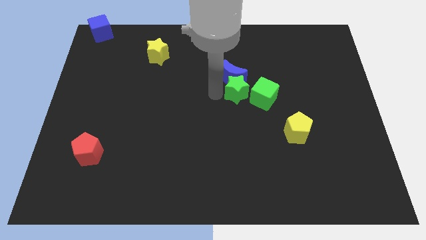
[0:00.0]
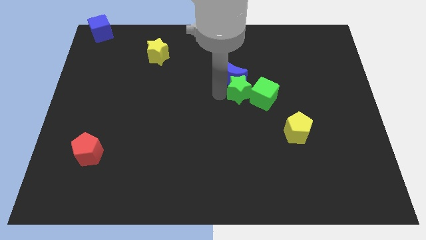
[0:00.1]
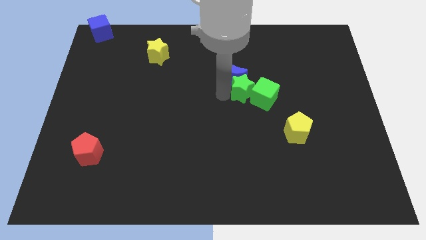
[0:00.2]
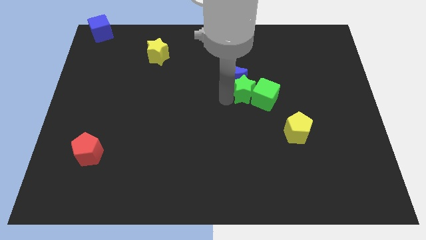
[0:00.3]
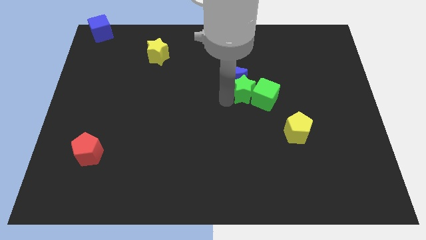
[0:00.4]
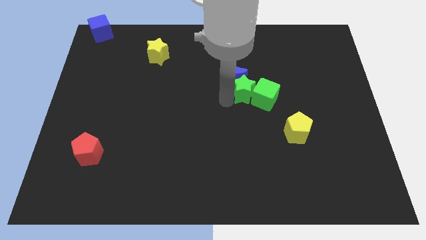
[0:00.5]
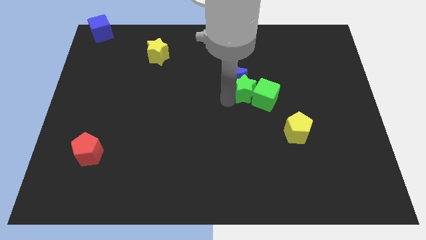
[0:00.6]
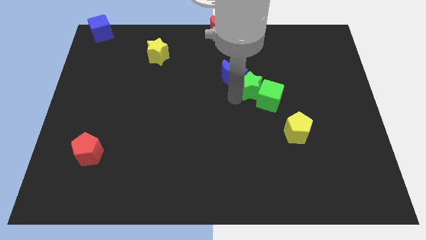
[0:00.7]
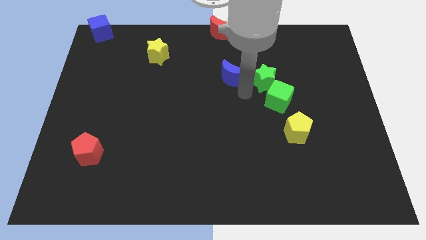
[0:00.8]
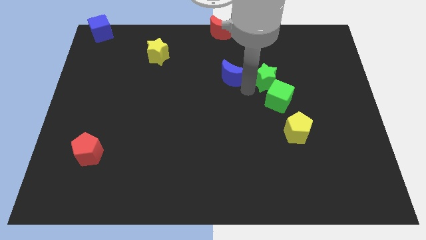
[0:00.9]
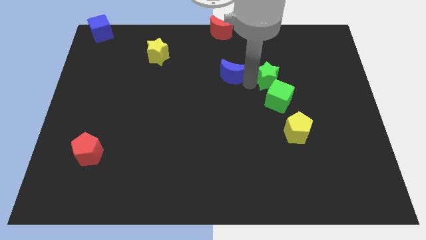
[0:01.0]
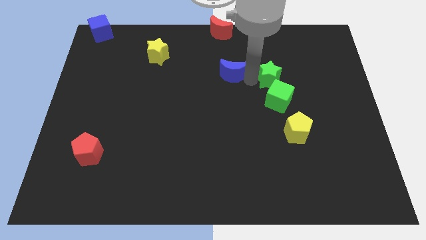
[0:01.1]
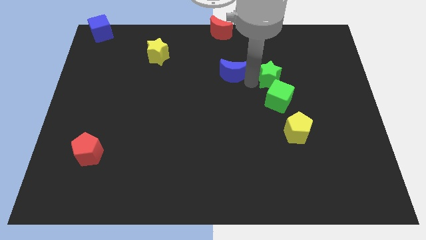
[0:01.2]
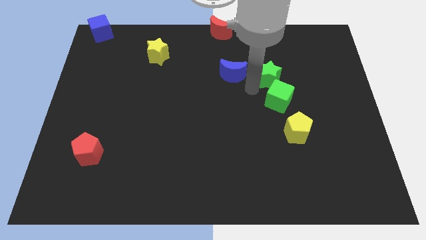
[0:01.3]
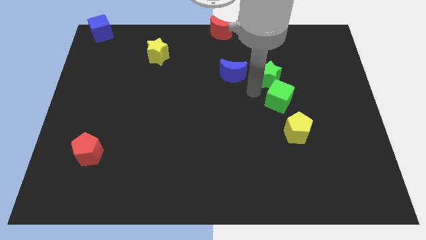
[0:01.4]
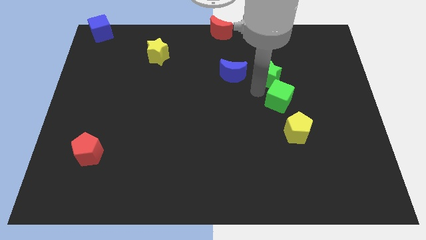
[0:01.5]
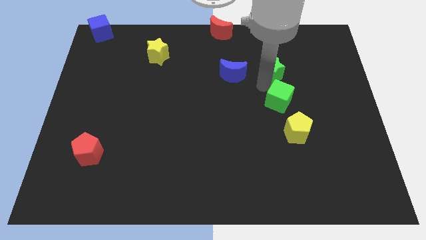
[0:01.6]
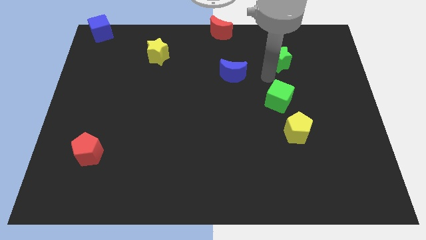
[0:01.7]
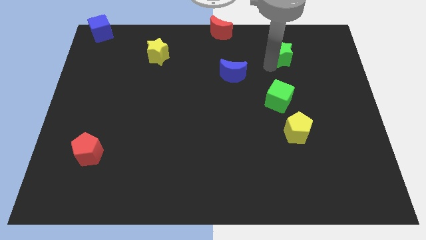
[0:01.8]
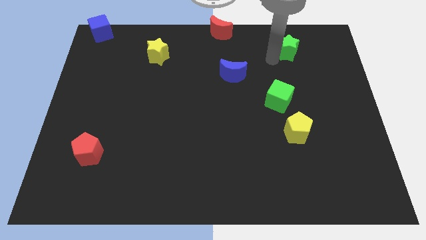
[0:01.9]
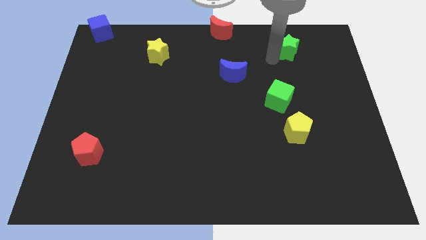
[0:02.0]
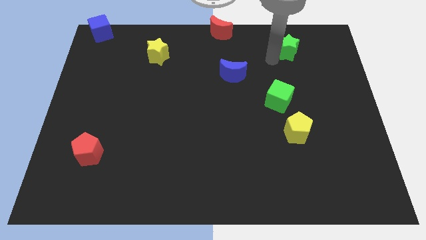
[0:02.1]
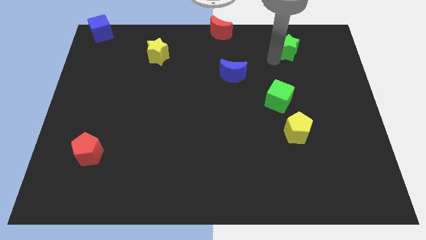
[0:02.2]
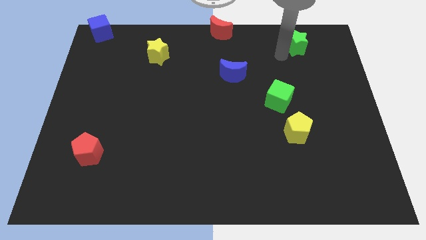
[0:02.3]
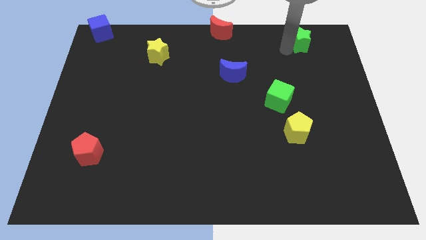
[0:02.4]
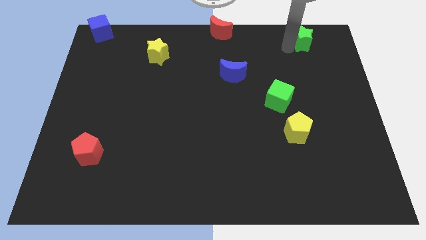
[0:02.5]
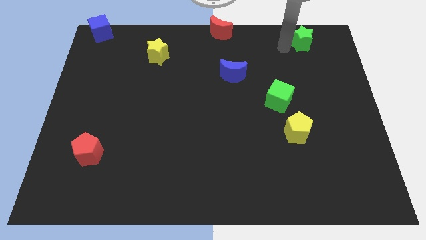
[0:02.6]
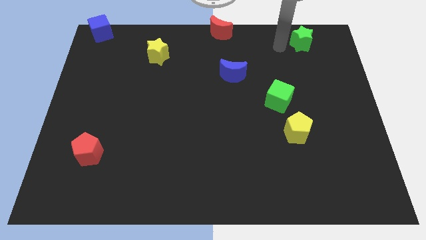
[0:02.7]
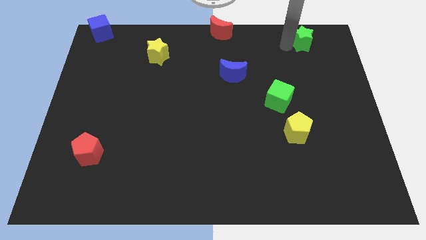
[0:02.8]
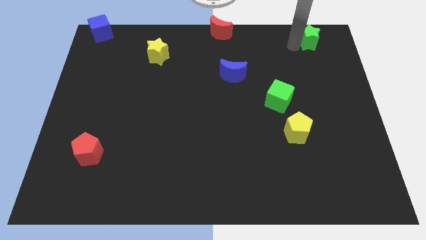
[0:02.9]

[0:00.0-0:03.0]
move the green star towards the top right corner

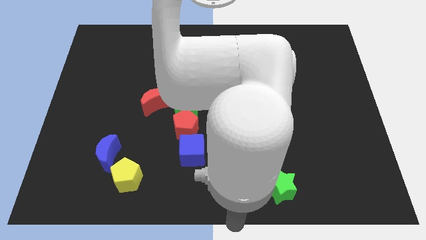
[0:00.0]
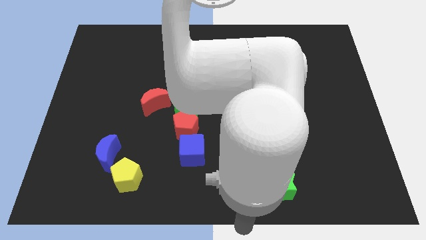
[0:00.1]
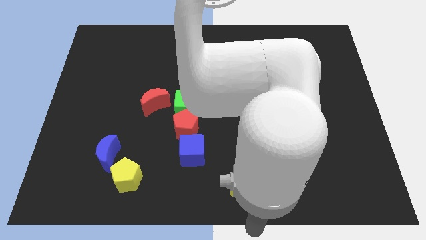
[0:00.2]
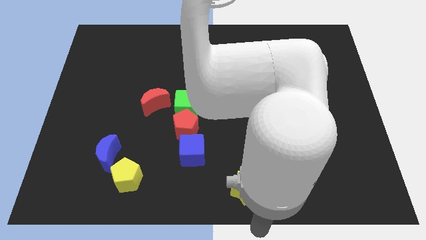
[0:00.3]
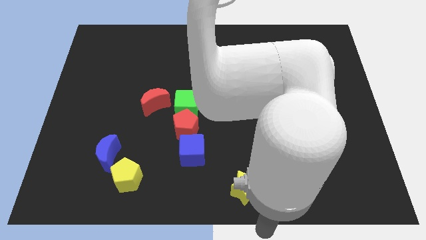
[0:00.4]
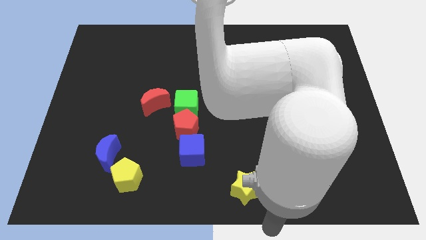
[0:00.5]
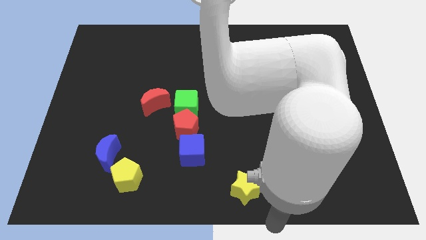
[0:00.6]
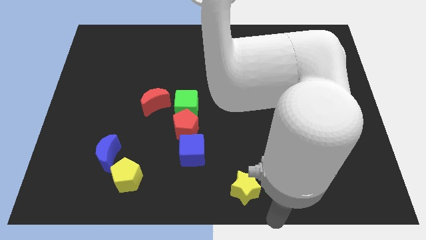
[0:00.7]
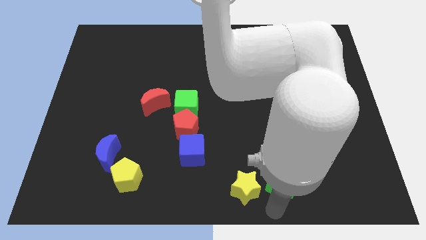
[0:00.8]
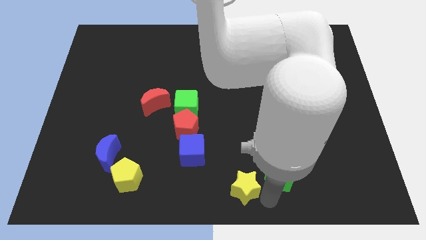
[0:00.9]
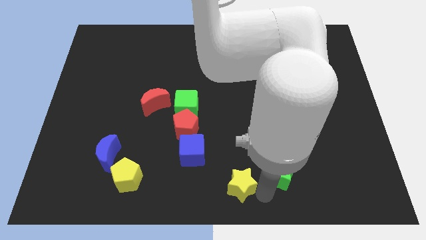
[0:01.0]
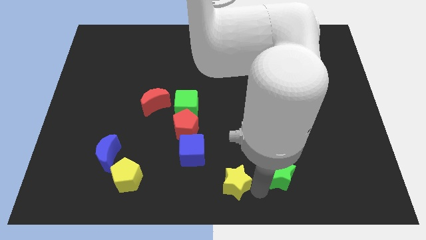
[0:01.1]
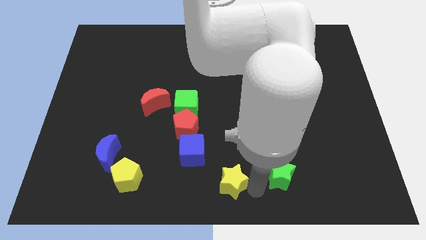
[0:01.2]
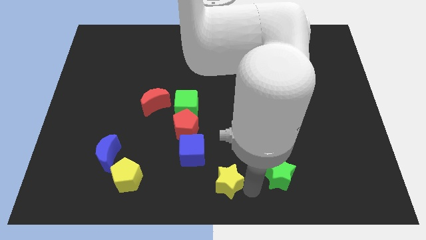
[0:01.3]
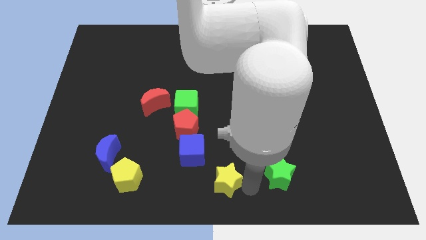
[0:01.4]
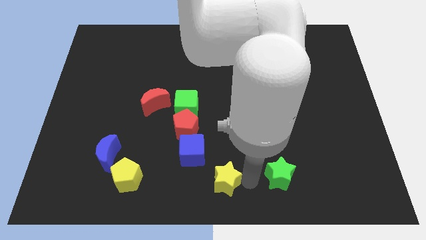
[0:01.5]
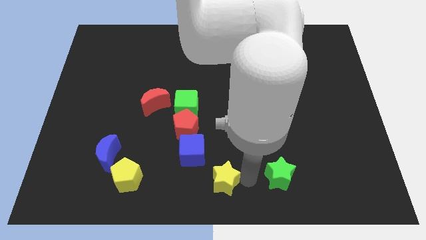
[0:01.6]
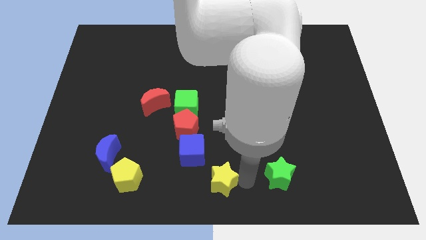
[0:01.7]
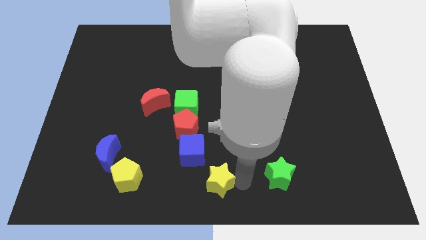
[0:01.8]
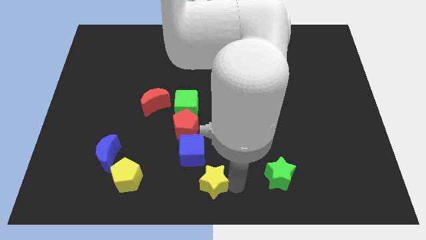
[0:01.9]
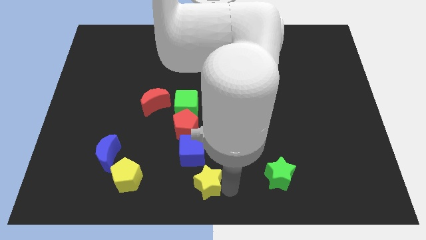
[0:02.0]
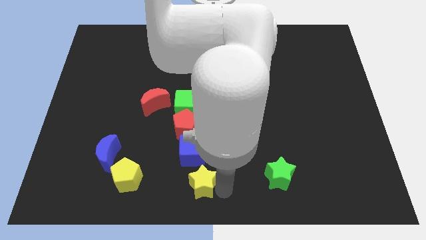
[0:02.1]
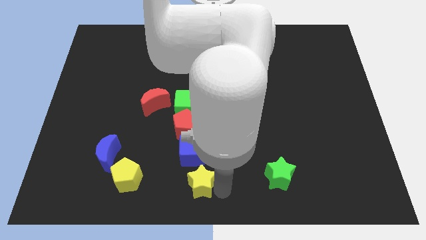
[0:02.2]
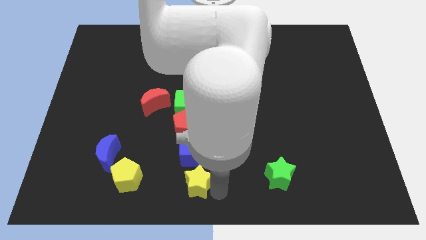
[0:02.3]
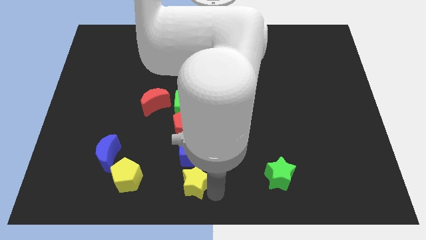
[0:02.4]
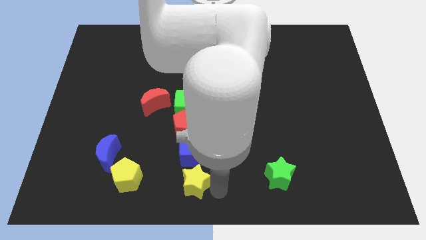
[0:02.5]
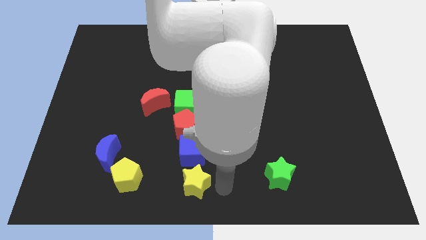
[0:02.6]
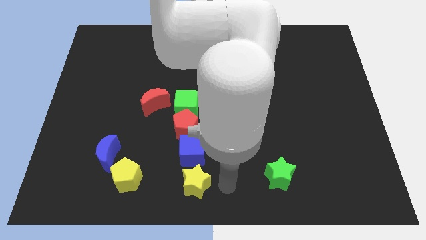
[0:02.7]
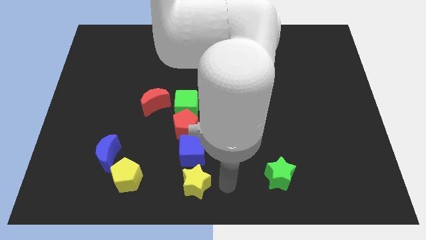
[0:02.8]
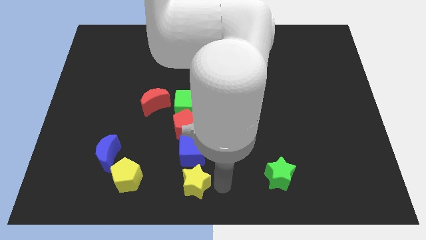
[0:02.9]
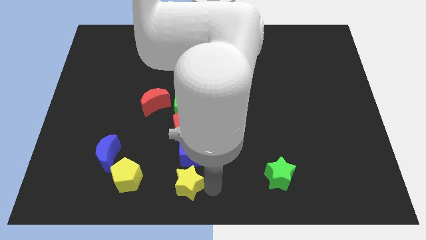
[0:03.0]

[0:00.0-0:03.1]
move yellow star below blue cube

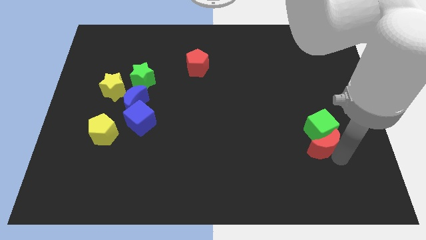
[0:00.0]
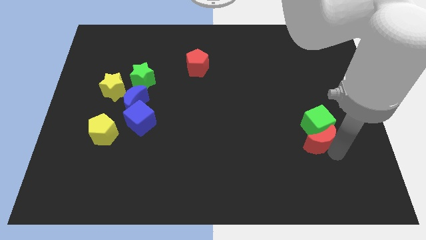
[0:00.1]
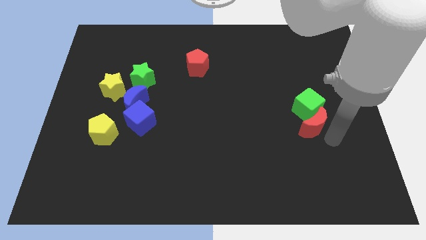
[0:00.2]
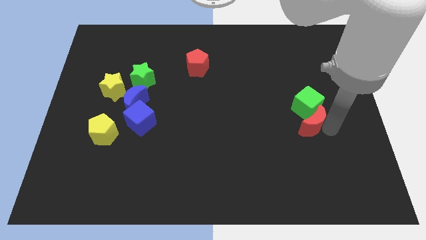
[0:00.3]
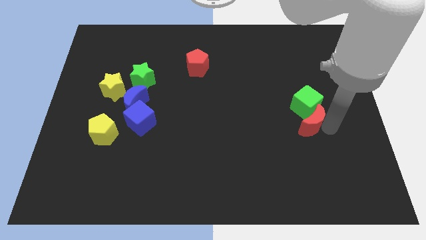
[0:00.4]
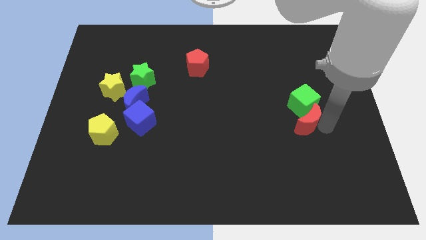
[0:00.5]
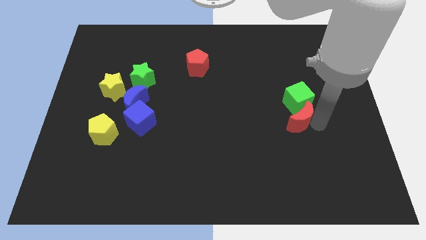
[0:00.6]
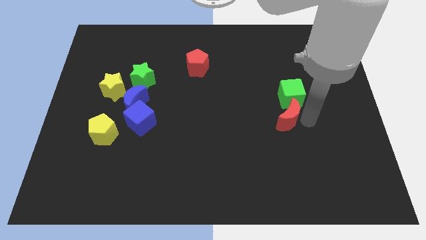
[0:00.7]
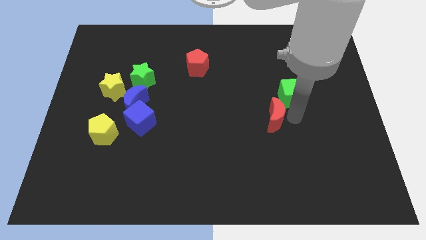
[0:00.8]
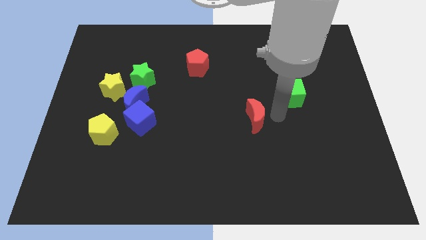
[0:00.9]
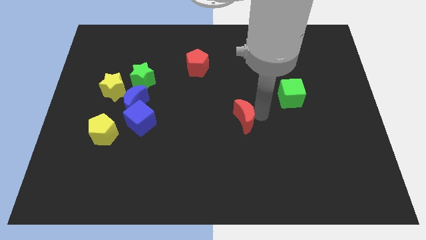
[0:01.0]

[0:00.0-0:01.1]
separate green cube and red moon

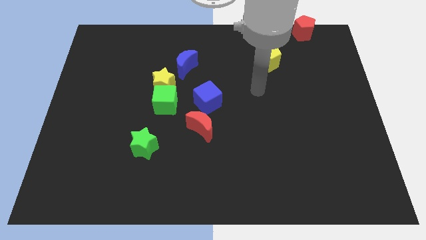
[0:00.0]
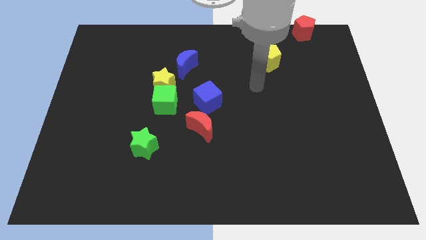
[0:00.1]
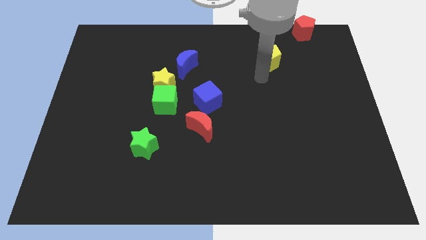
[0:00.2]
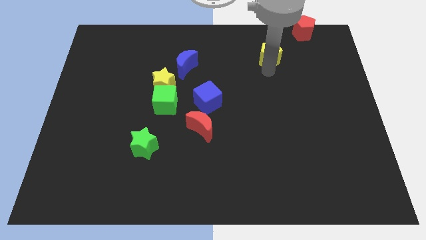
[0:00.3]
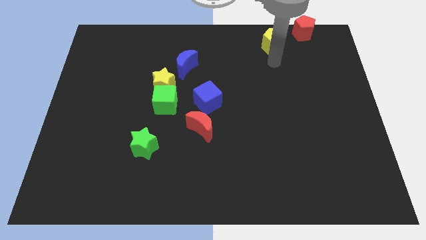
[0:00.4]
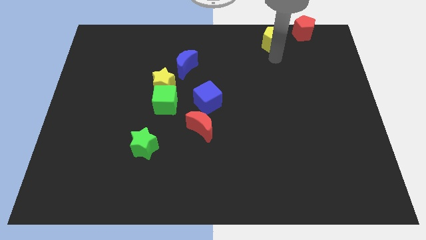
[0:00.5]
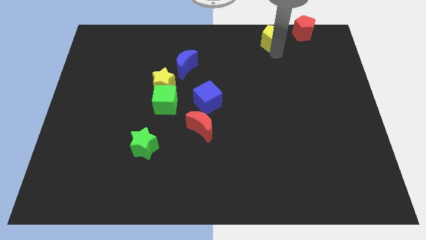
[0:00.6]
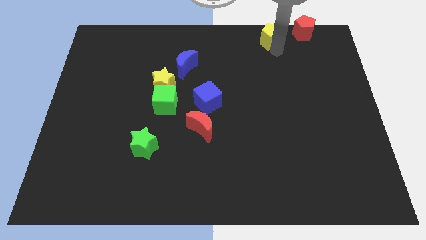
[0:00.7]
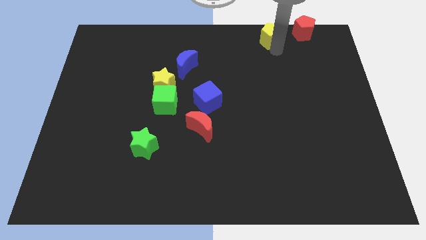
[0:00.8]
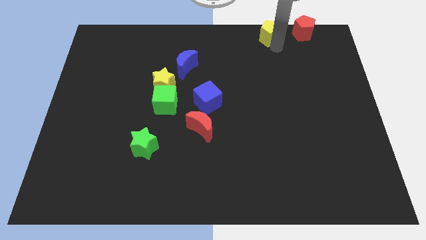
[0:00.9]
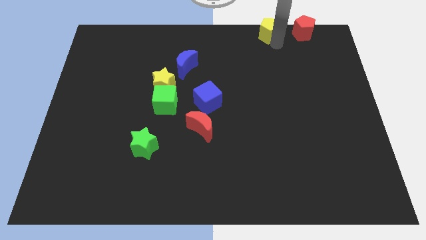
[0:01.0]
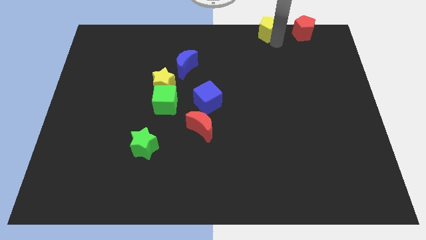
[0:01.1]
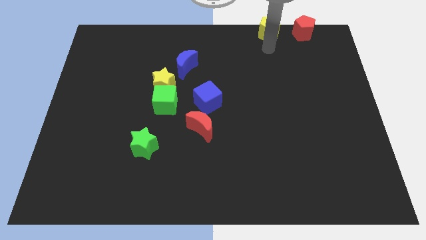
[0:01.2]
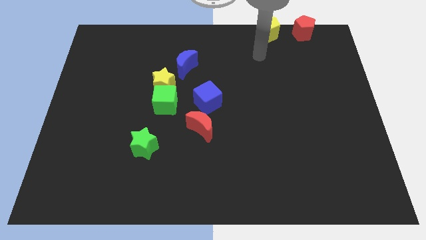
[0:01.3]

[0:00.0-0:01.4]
move the yellow pentagon diagonally on the top right side of the blue cube

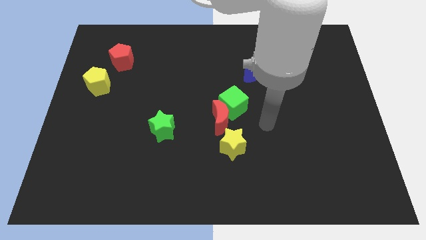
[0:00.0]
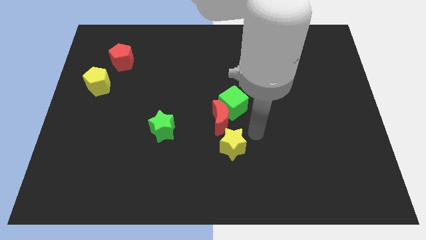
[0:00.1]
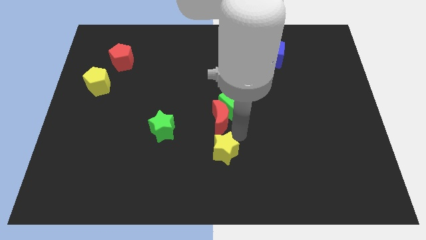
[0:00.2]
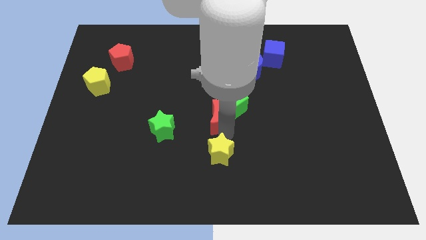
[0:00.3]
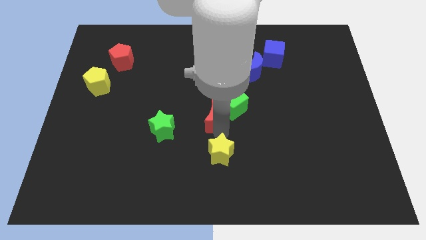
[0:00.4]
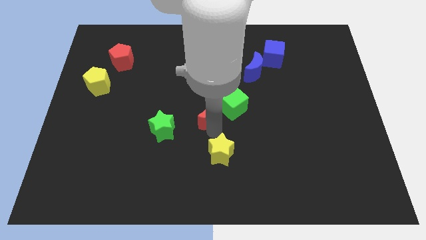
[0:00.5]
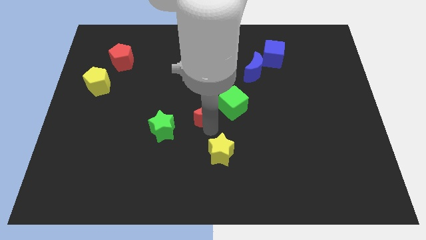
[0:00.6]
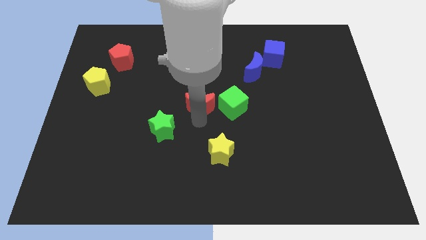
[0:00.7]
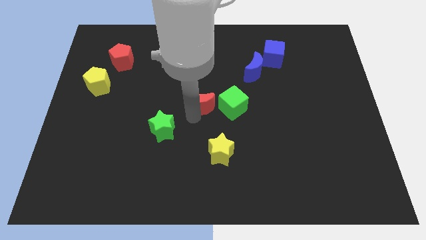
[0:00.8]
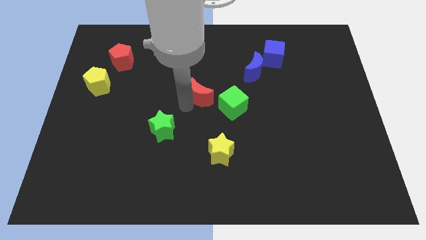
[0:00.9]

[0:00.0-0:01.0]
separate the red crescent from the green cube
